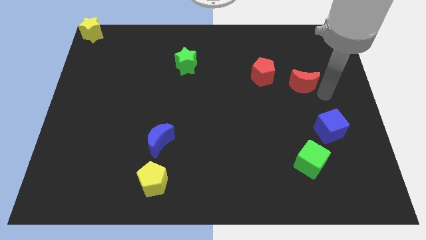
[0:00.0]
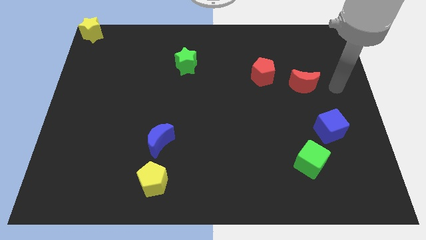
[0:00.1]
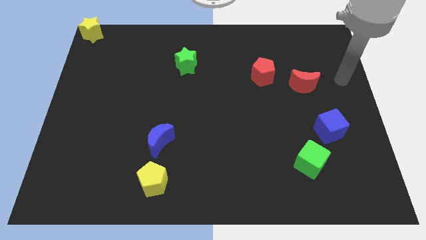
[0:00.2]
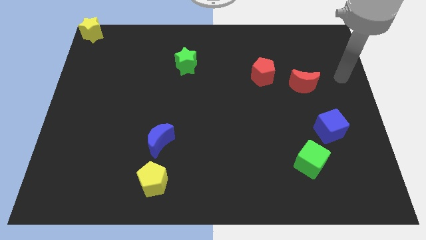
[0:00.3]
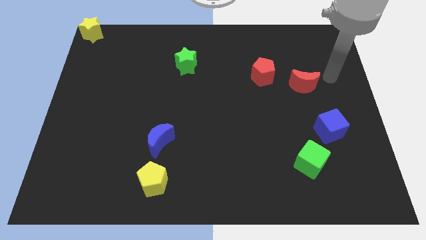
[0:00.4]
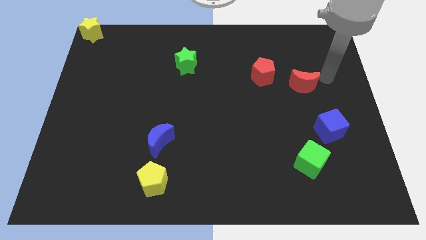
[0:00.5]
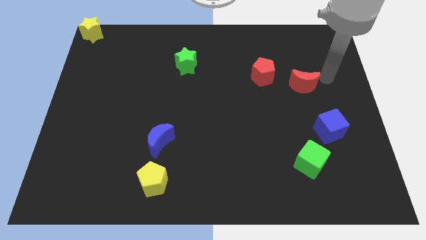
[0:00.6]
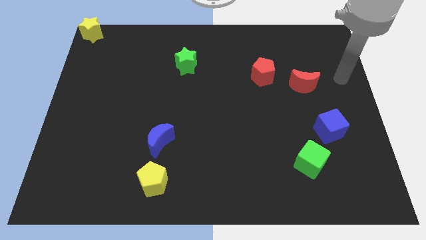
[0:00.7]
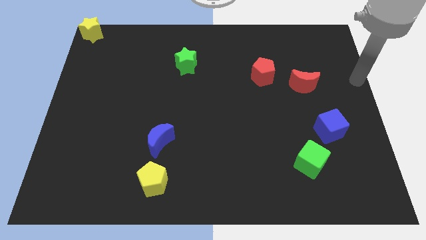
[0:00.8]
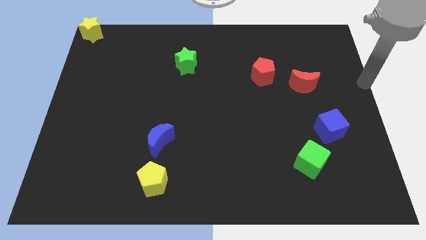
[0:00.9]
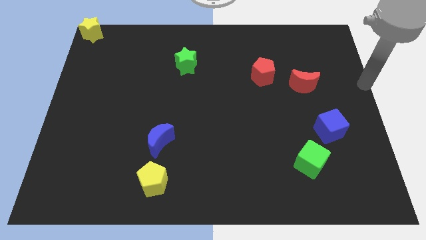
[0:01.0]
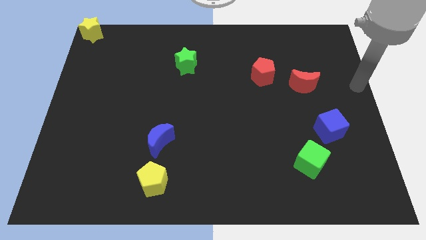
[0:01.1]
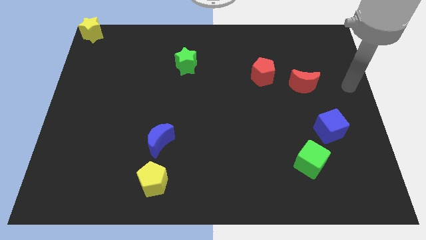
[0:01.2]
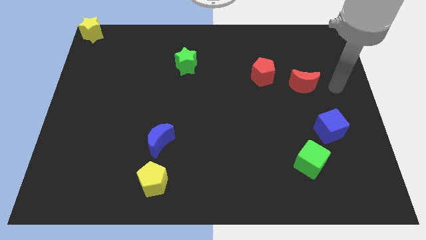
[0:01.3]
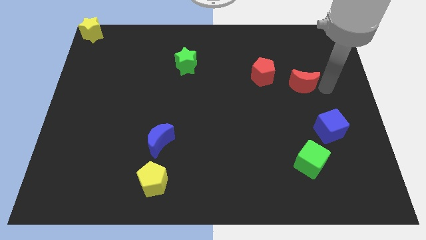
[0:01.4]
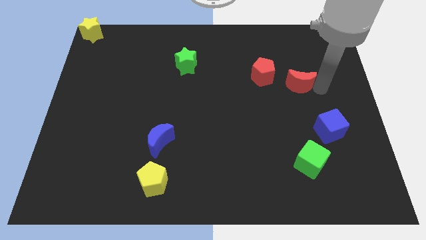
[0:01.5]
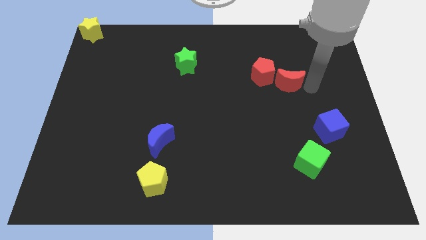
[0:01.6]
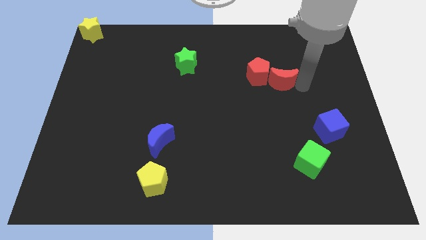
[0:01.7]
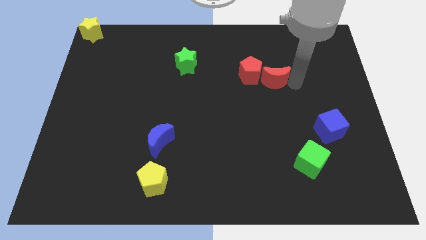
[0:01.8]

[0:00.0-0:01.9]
push the red crescent into red pentagon

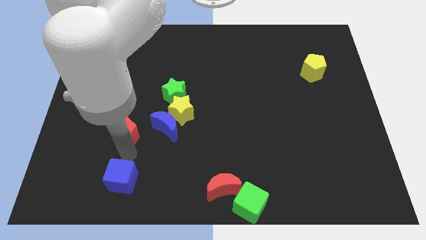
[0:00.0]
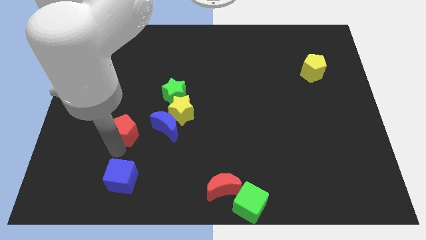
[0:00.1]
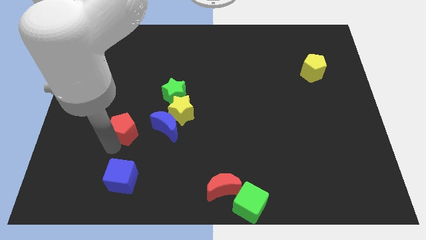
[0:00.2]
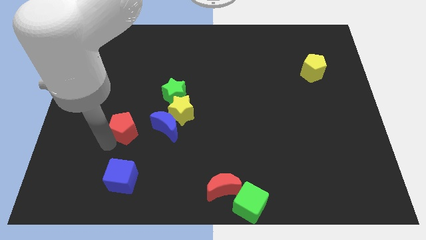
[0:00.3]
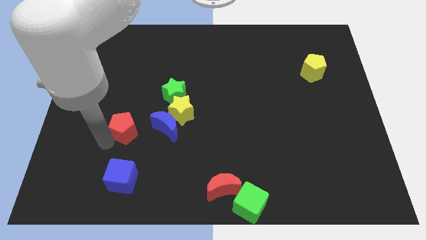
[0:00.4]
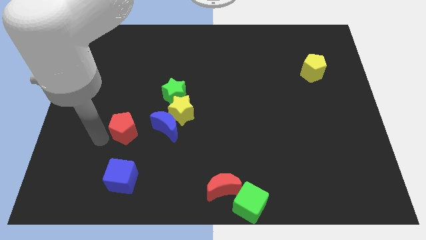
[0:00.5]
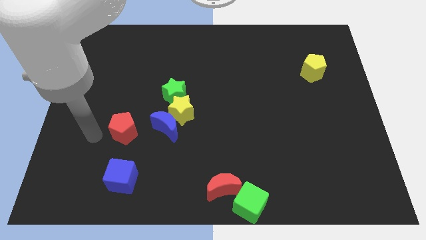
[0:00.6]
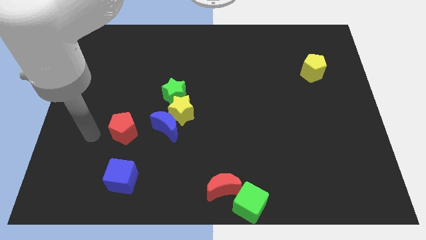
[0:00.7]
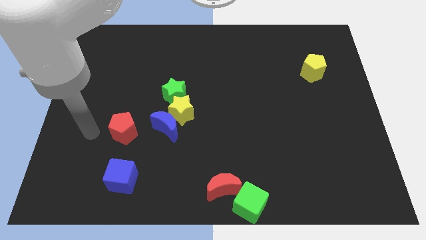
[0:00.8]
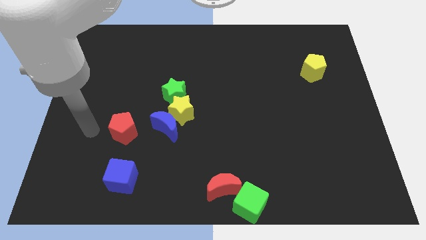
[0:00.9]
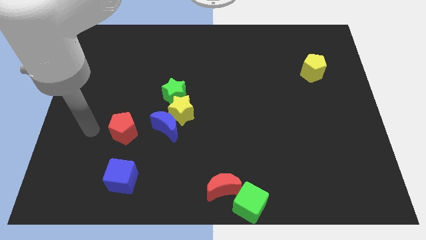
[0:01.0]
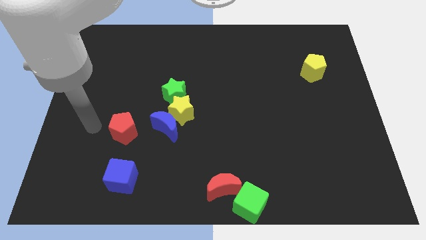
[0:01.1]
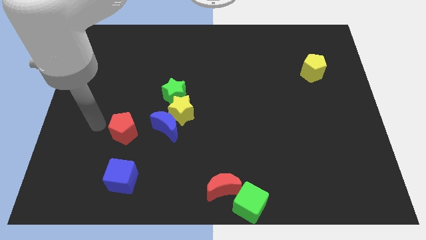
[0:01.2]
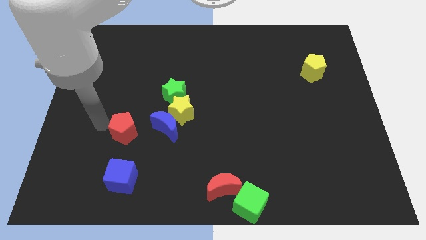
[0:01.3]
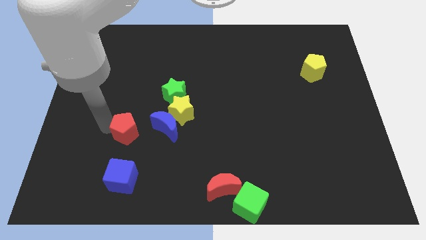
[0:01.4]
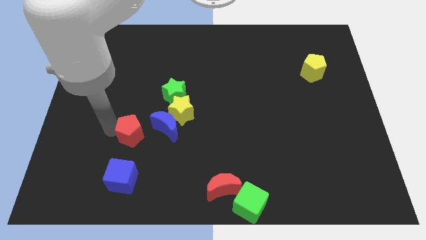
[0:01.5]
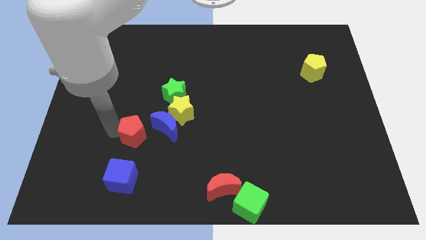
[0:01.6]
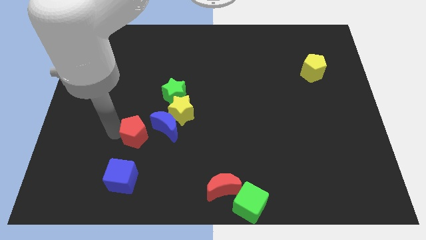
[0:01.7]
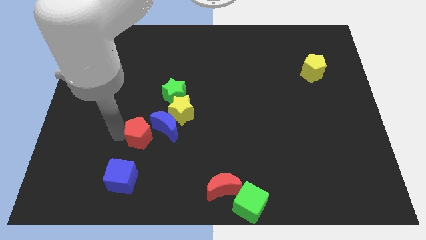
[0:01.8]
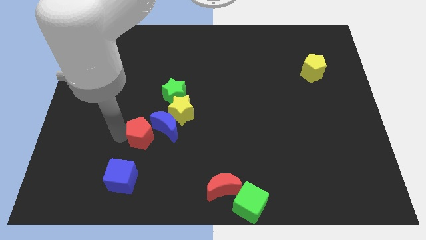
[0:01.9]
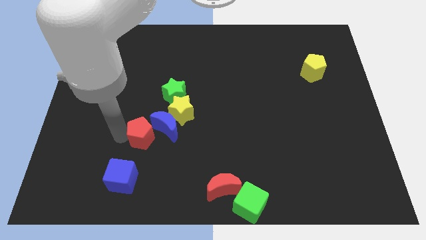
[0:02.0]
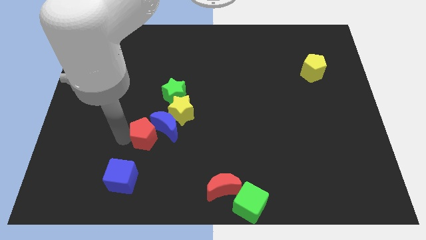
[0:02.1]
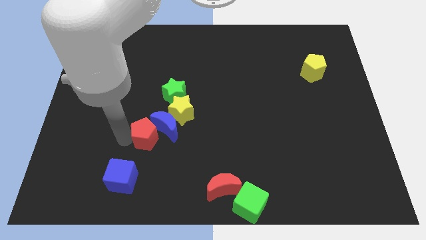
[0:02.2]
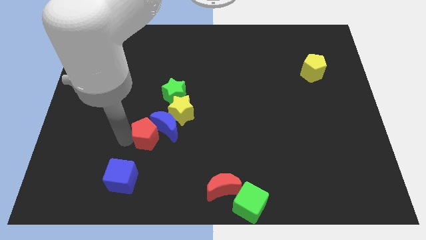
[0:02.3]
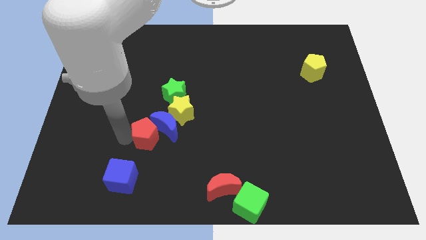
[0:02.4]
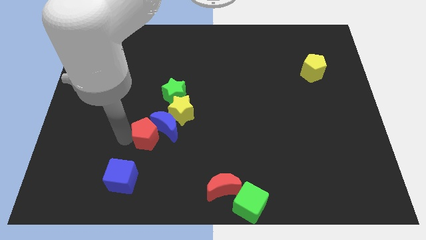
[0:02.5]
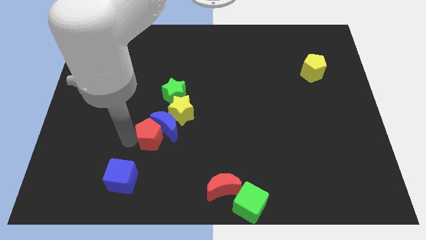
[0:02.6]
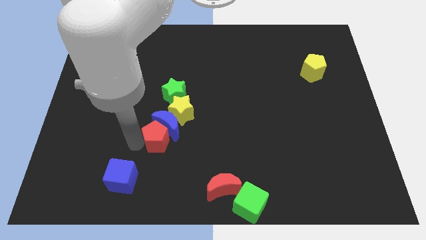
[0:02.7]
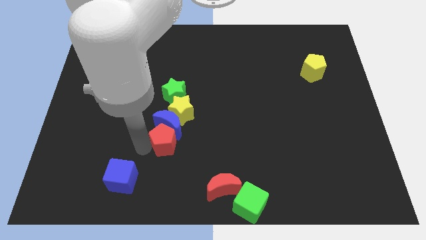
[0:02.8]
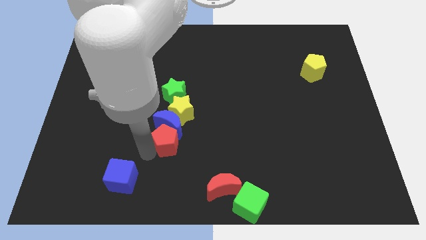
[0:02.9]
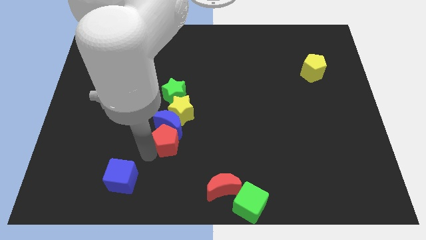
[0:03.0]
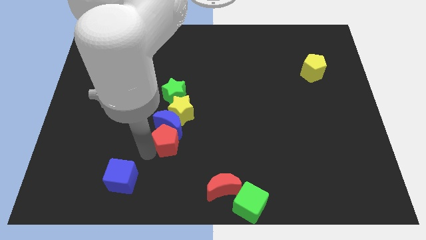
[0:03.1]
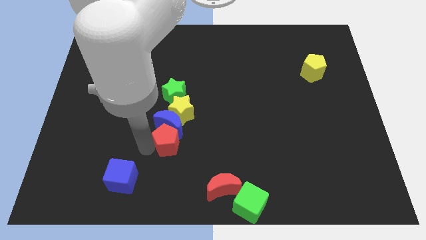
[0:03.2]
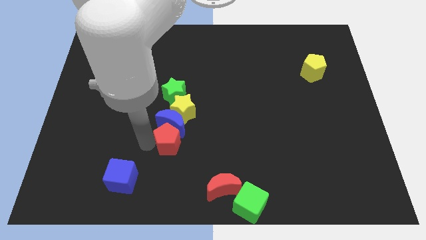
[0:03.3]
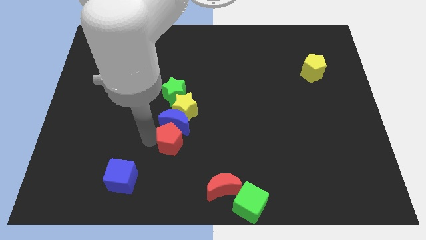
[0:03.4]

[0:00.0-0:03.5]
move the red pentagon to the bottom of the blue crescent

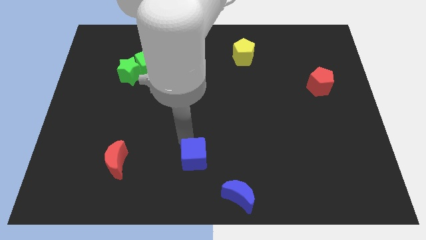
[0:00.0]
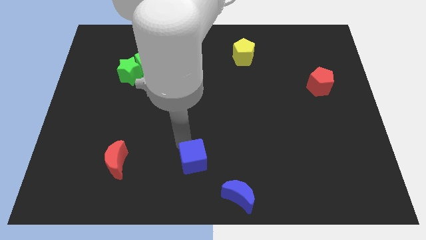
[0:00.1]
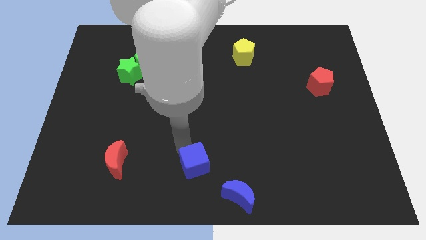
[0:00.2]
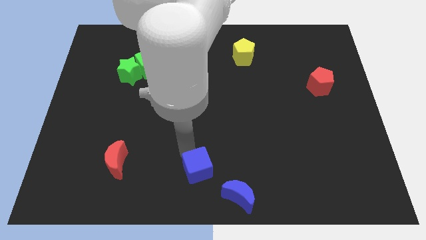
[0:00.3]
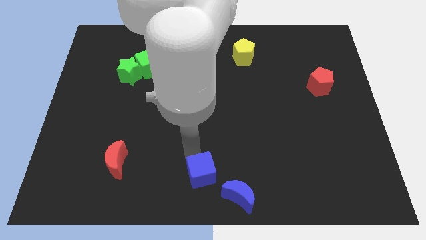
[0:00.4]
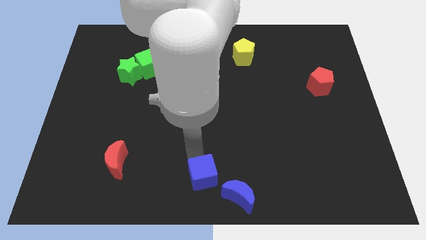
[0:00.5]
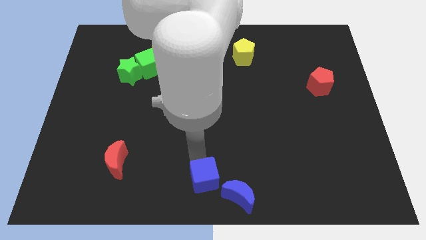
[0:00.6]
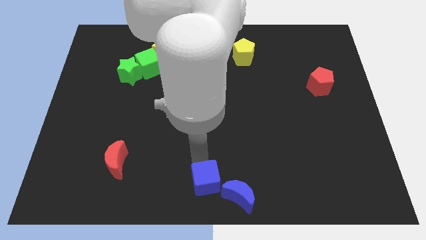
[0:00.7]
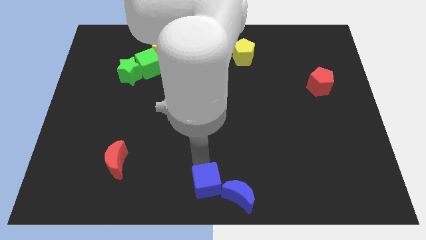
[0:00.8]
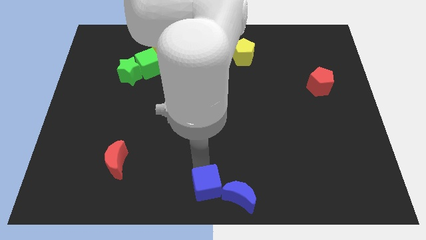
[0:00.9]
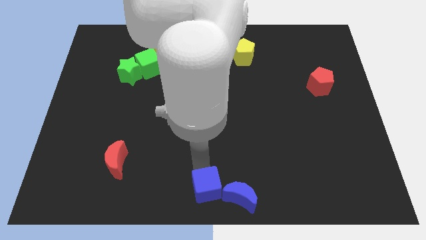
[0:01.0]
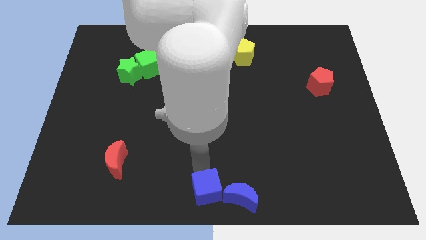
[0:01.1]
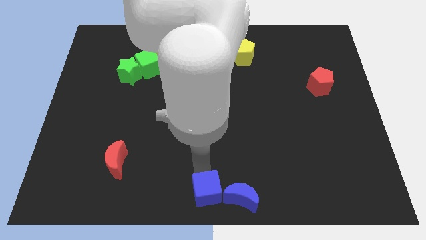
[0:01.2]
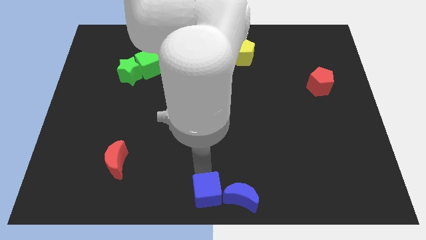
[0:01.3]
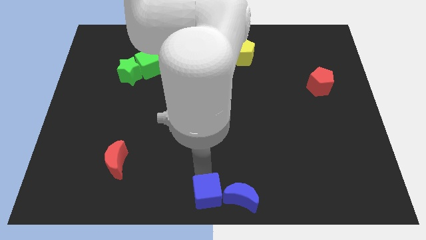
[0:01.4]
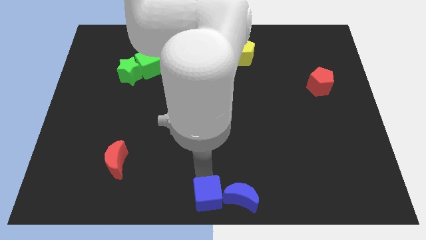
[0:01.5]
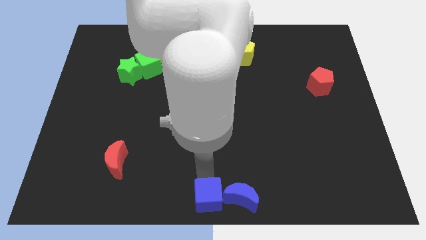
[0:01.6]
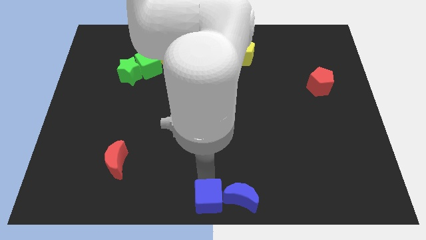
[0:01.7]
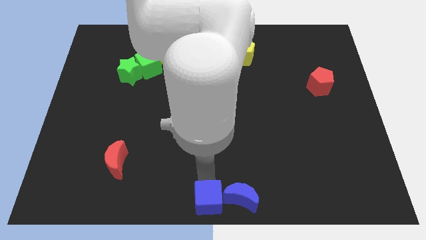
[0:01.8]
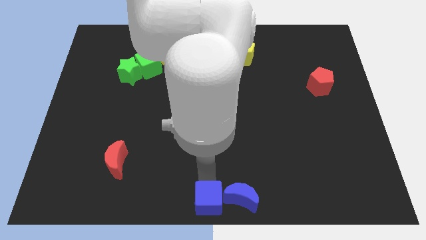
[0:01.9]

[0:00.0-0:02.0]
place the blue cube left to the blue crescent

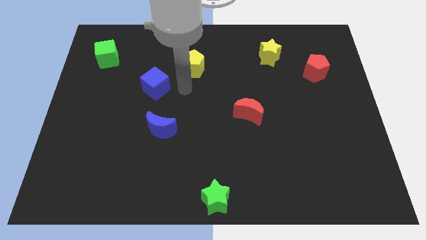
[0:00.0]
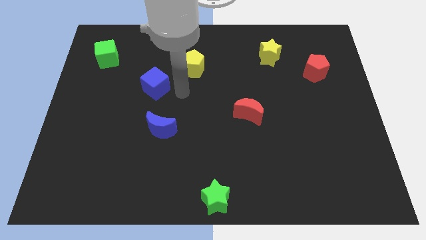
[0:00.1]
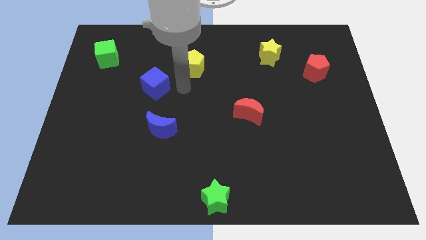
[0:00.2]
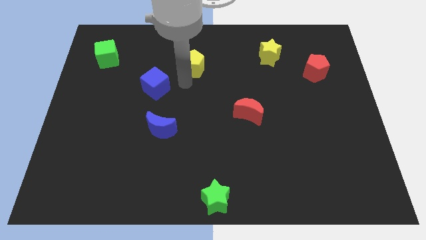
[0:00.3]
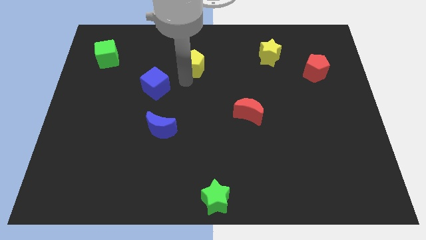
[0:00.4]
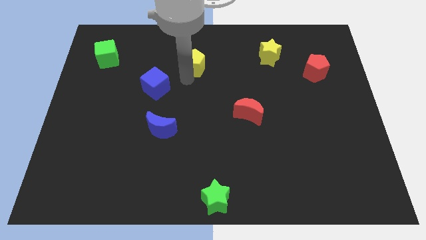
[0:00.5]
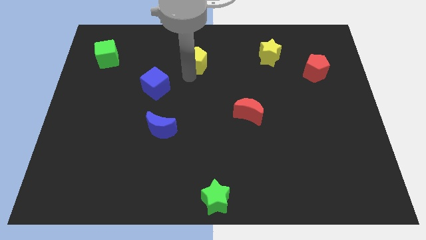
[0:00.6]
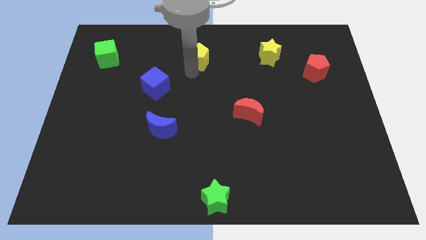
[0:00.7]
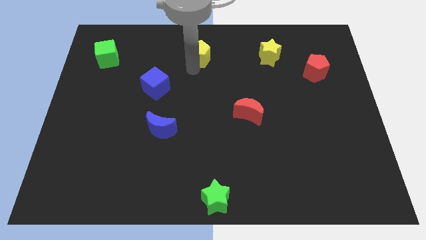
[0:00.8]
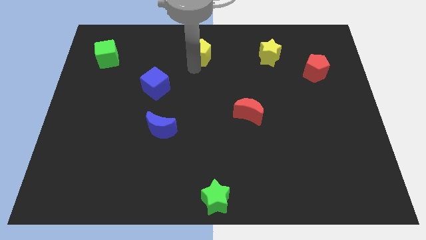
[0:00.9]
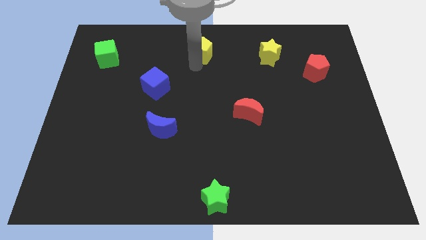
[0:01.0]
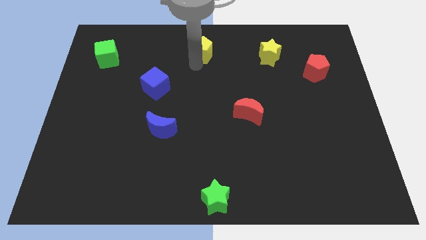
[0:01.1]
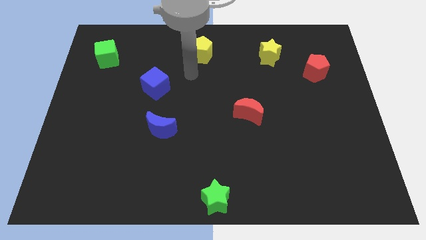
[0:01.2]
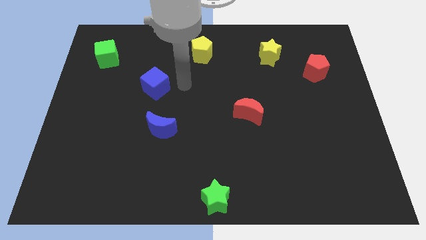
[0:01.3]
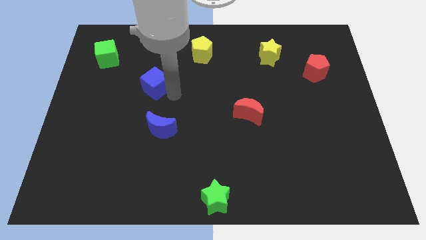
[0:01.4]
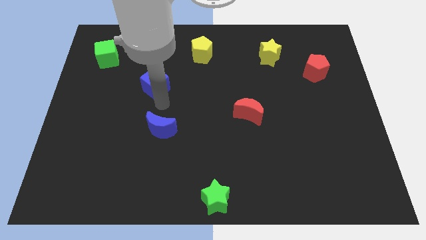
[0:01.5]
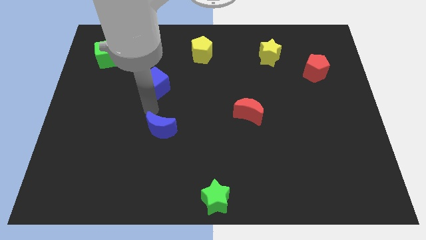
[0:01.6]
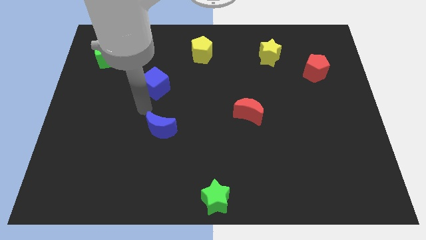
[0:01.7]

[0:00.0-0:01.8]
move yellow pentagon left to green stcube
